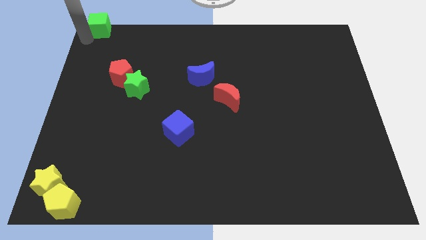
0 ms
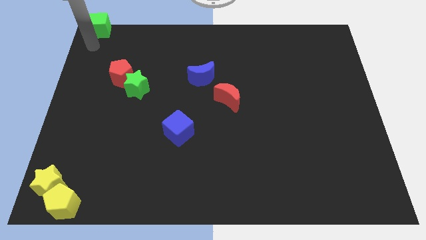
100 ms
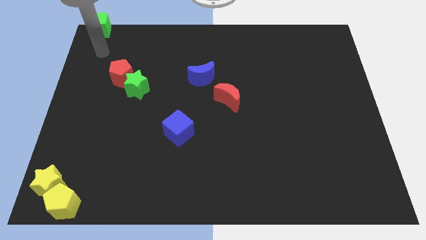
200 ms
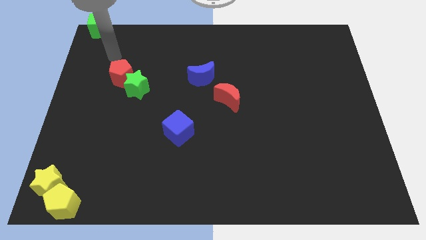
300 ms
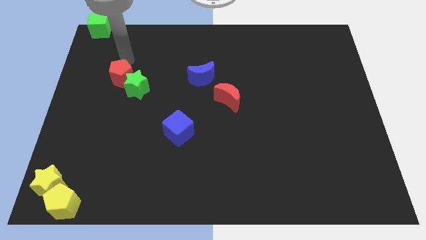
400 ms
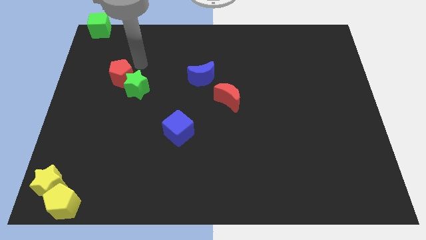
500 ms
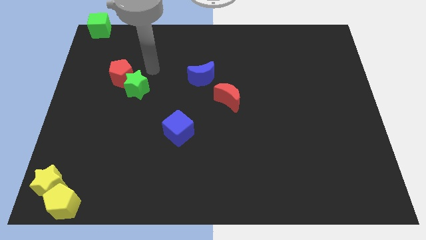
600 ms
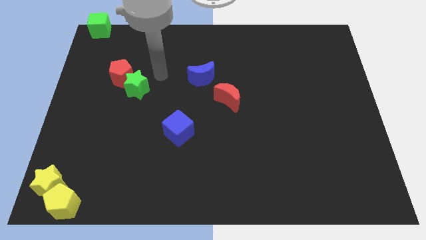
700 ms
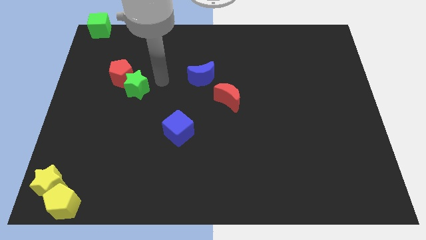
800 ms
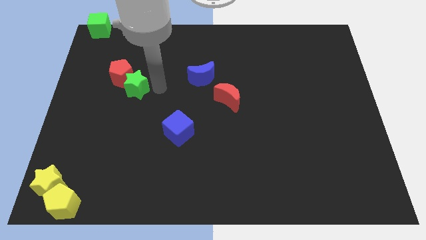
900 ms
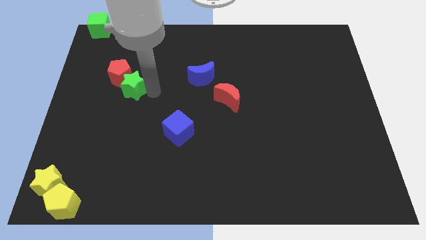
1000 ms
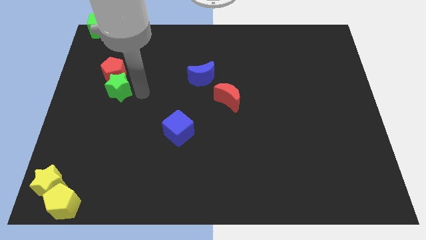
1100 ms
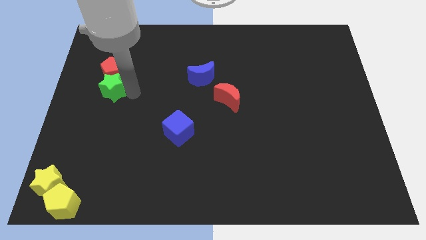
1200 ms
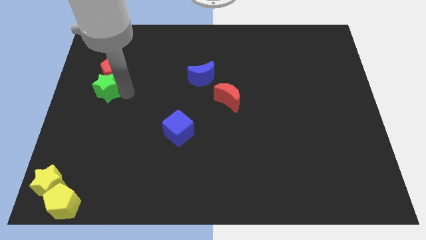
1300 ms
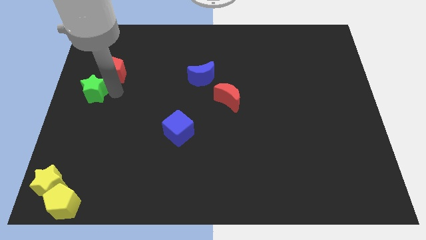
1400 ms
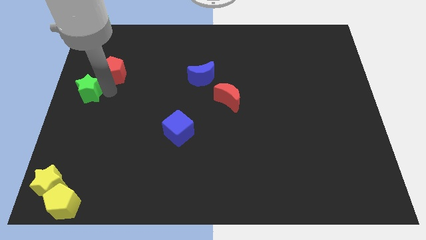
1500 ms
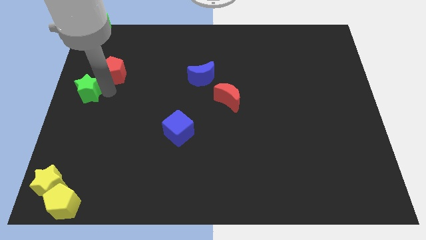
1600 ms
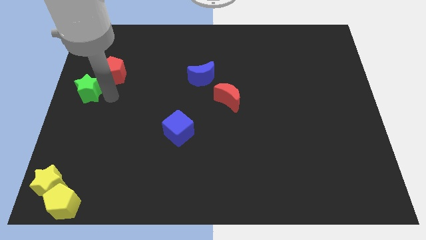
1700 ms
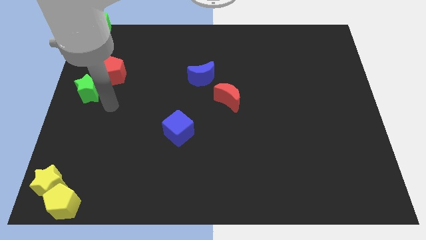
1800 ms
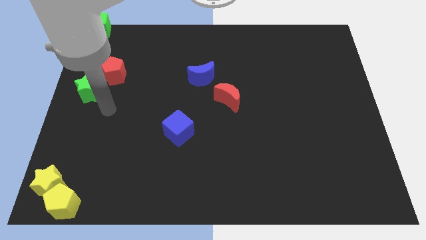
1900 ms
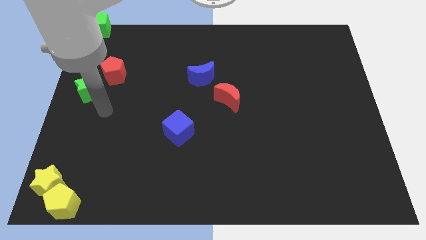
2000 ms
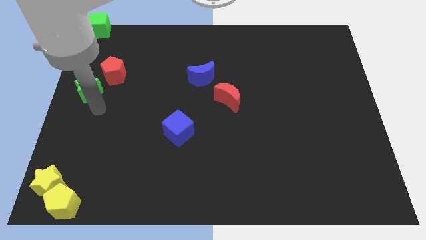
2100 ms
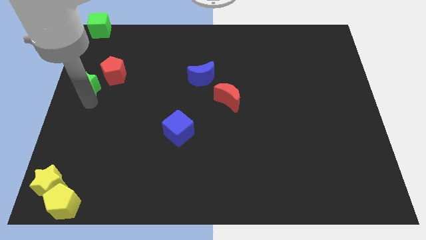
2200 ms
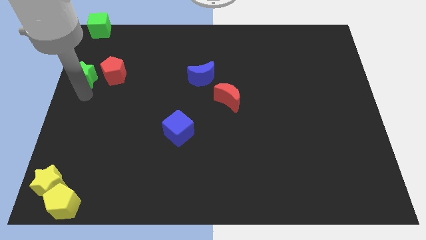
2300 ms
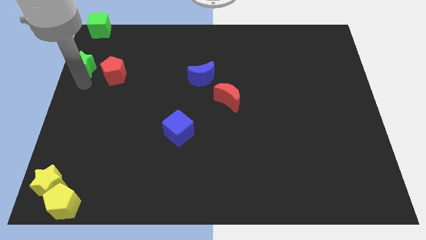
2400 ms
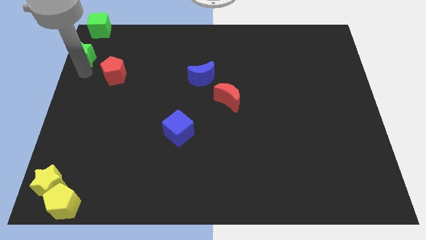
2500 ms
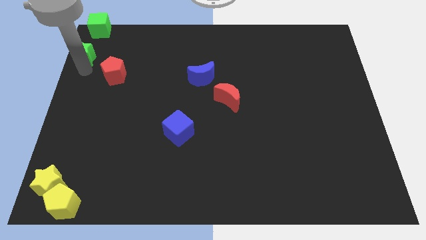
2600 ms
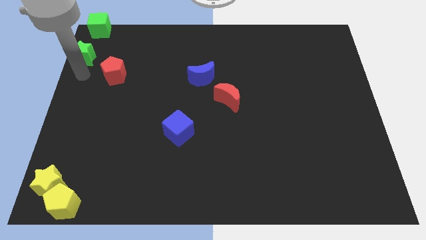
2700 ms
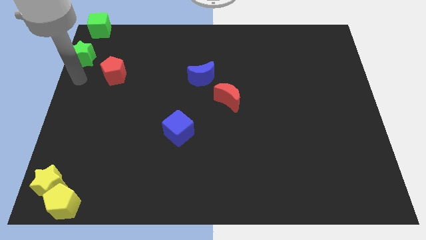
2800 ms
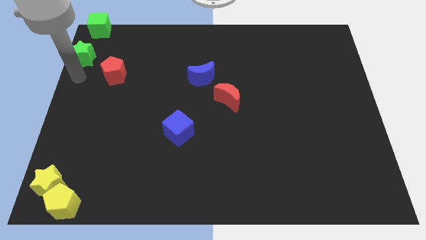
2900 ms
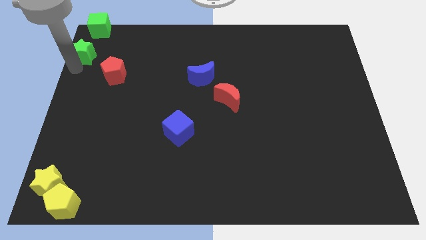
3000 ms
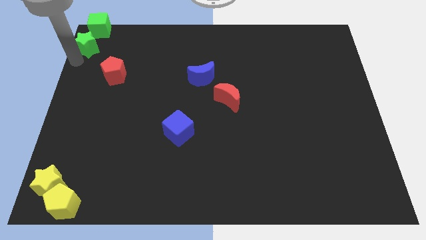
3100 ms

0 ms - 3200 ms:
separate the green star from the red pentagon

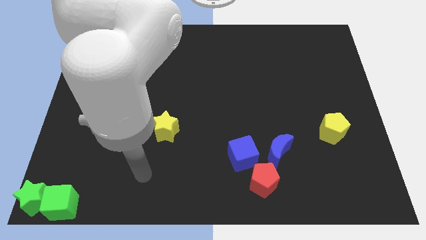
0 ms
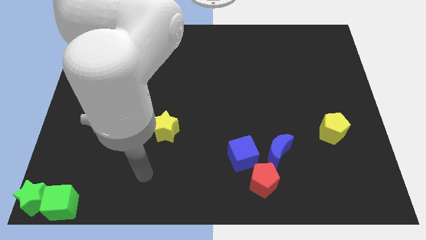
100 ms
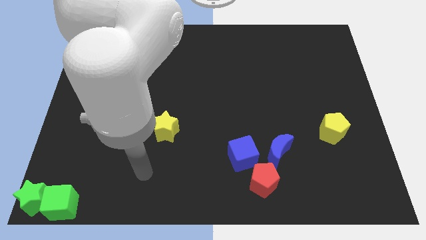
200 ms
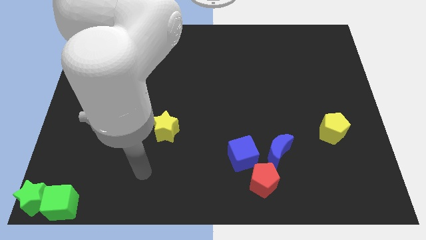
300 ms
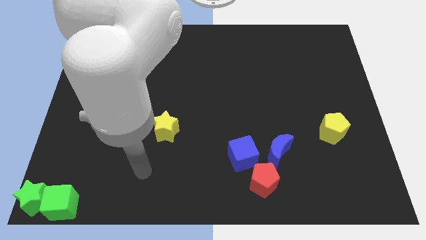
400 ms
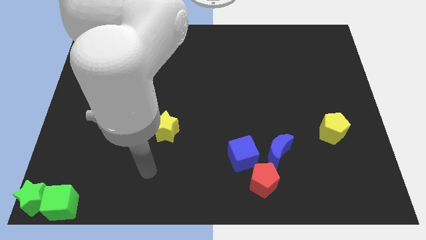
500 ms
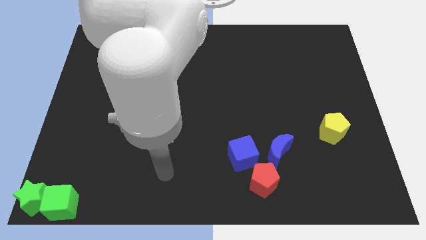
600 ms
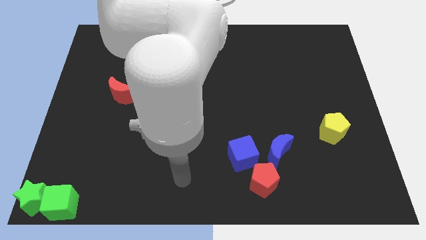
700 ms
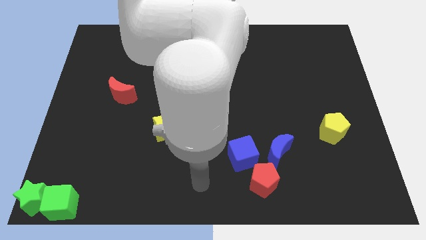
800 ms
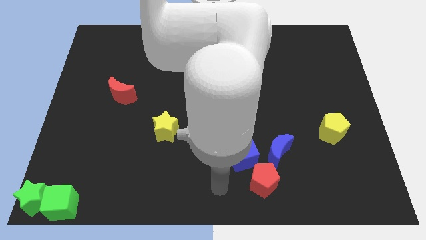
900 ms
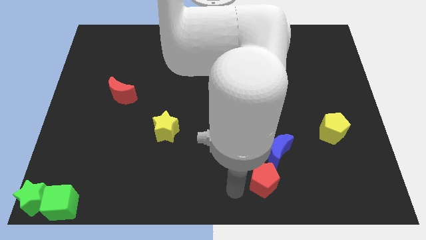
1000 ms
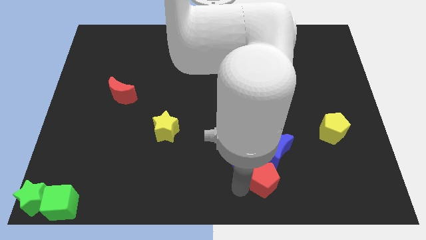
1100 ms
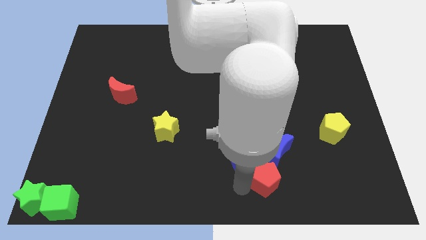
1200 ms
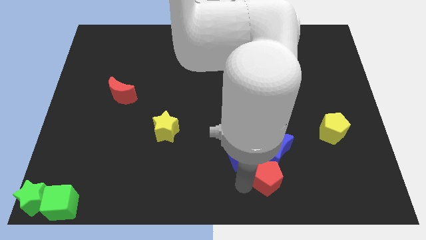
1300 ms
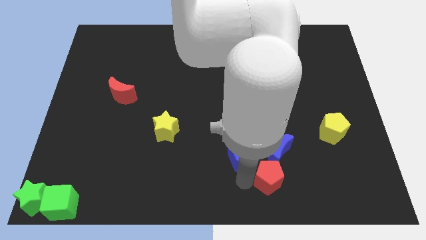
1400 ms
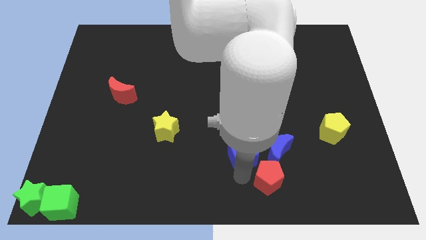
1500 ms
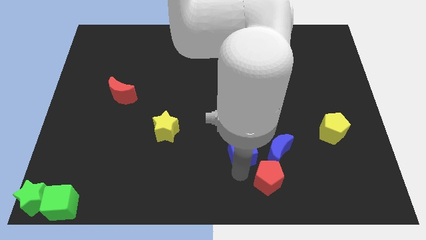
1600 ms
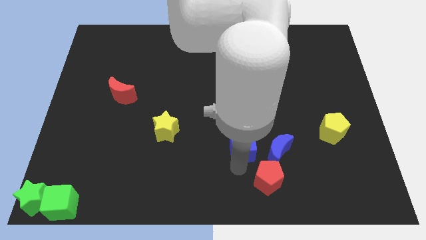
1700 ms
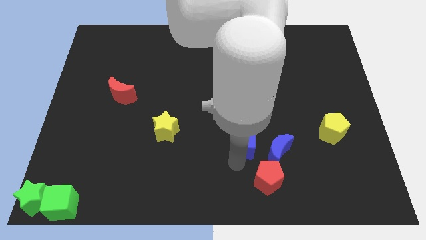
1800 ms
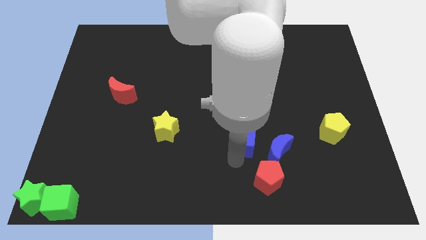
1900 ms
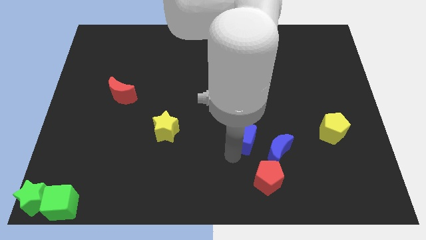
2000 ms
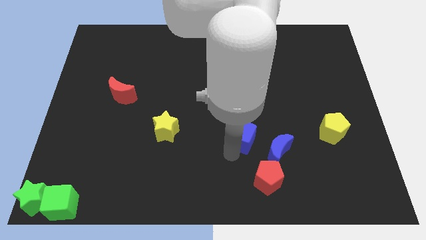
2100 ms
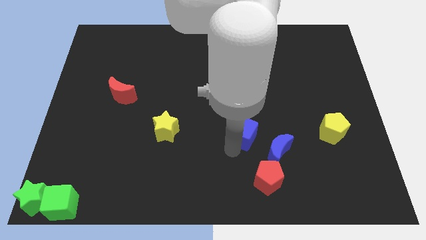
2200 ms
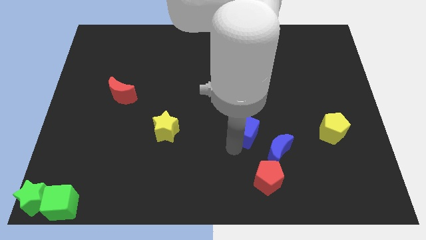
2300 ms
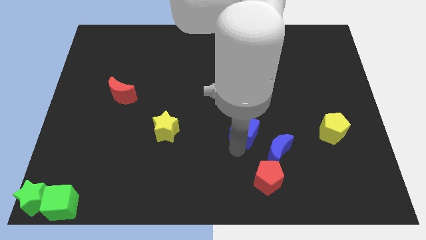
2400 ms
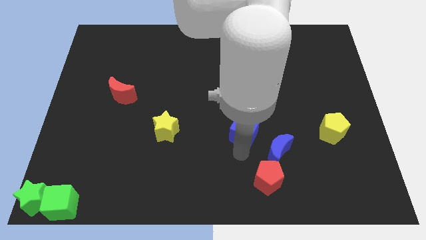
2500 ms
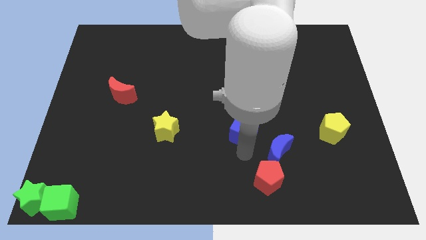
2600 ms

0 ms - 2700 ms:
place the blue cube in between the yellow star and yellow pentagon

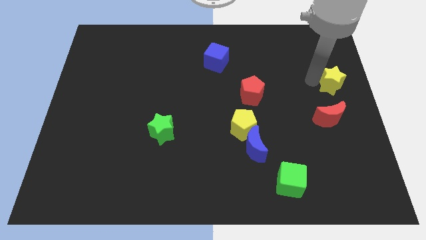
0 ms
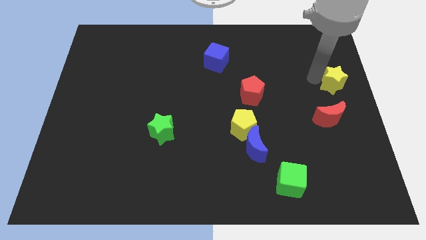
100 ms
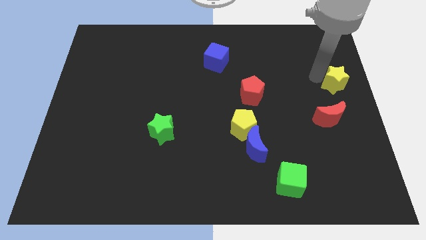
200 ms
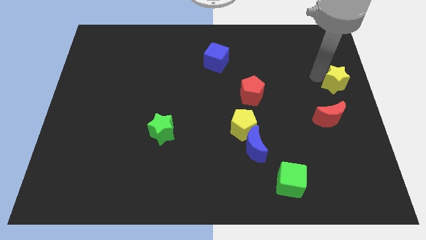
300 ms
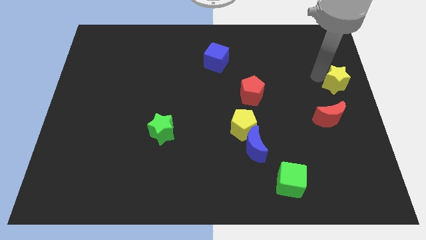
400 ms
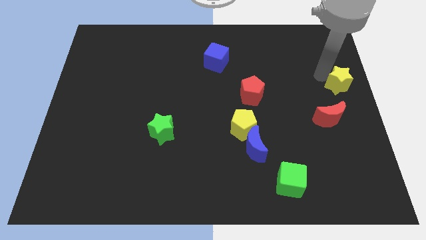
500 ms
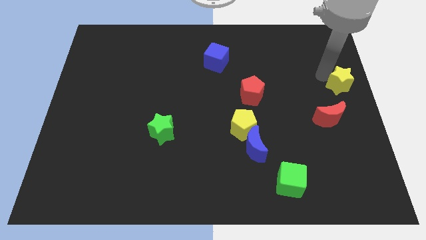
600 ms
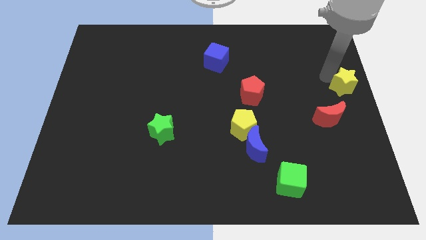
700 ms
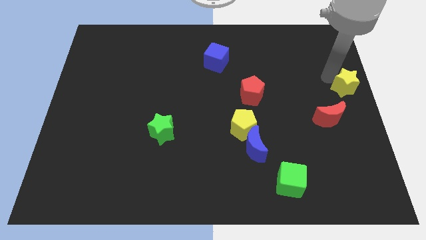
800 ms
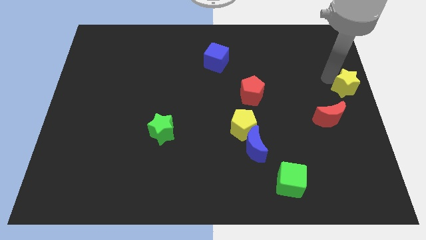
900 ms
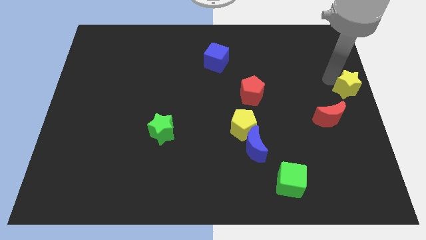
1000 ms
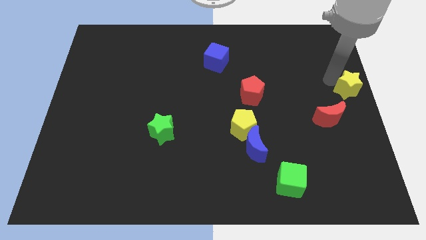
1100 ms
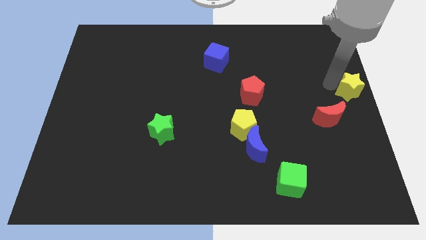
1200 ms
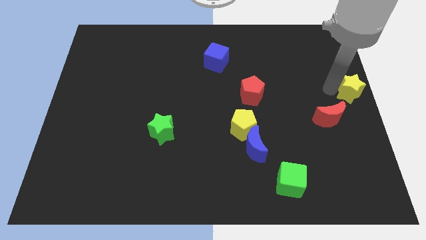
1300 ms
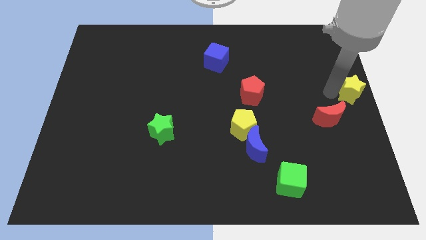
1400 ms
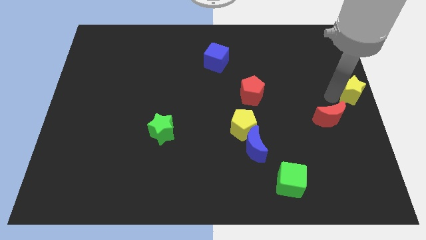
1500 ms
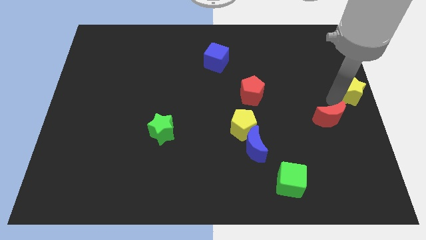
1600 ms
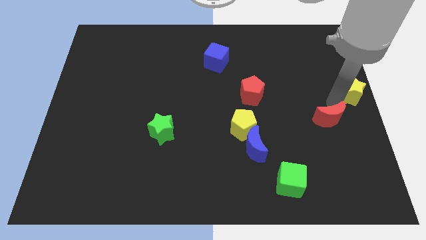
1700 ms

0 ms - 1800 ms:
move the yellow star to the top right side of the red moon

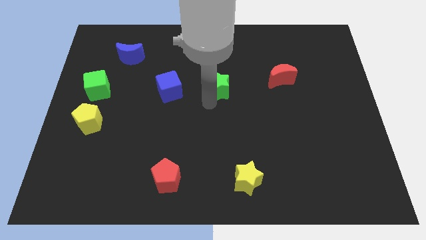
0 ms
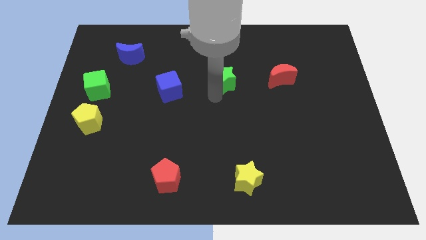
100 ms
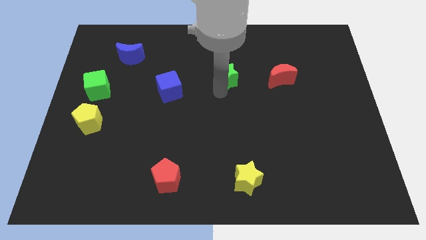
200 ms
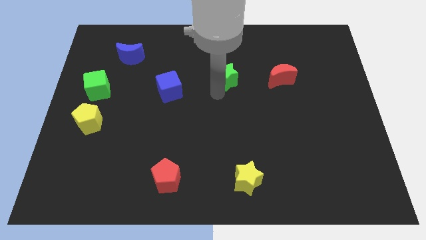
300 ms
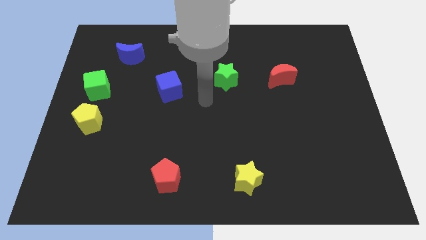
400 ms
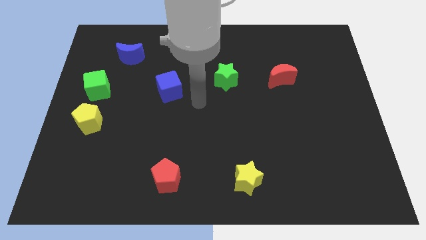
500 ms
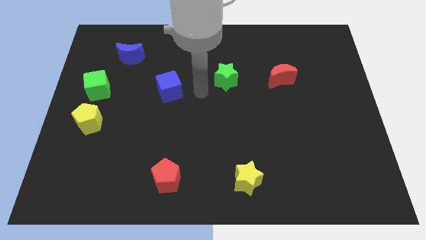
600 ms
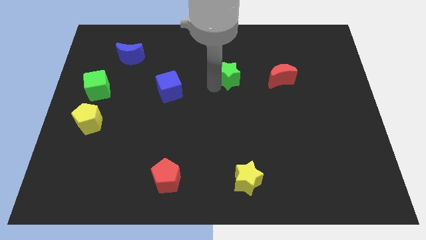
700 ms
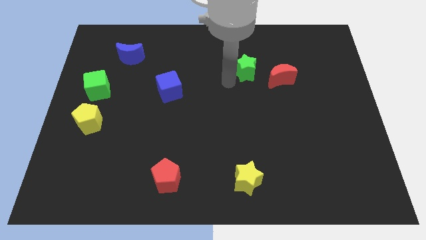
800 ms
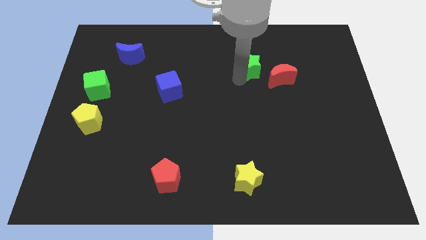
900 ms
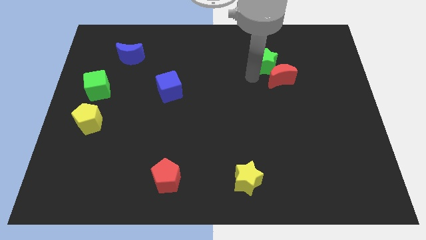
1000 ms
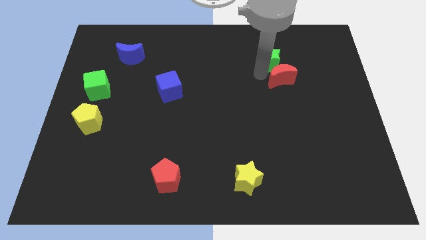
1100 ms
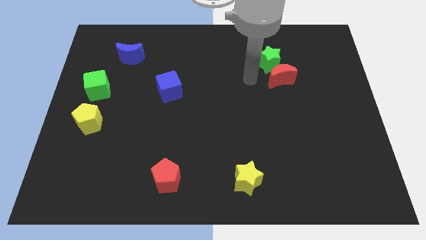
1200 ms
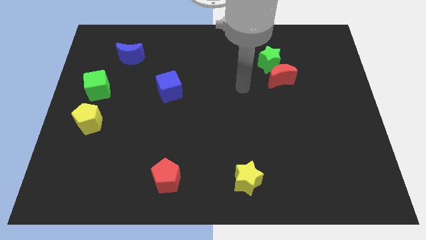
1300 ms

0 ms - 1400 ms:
place green star to the top of red moon
